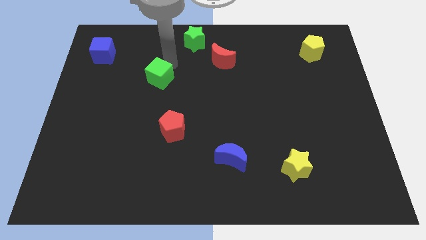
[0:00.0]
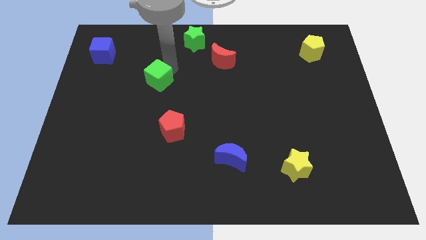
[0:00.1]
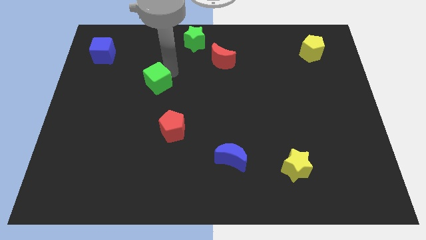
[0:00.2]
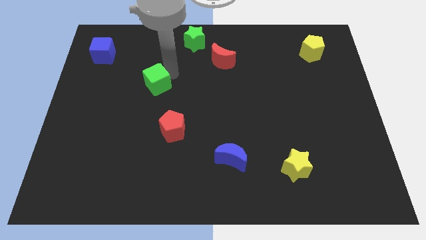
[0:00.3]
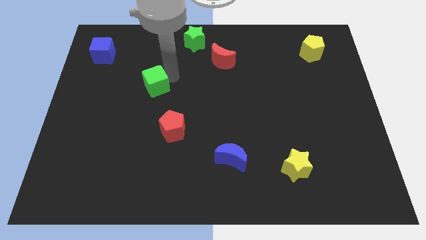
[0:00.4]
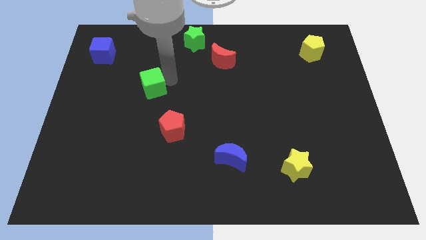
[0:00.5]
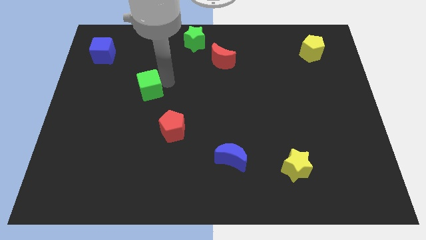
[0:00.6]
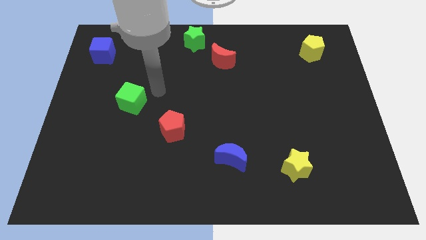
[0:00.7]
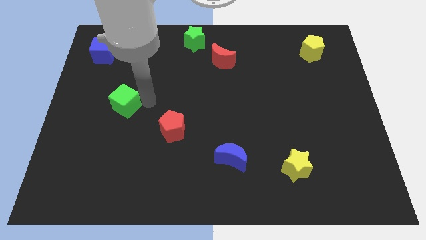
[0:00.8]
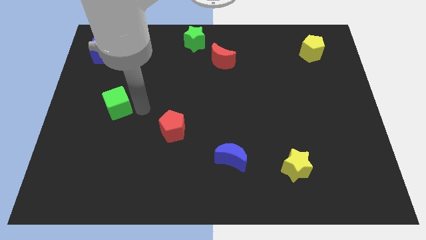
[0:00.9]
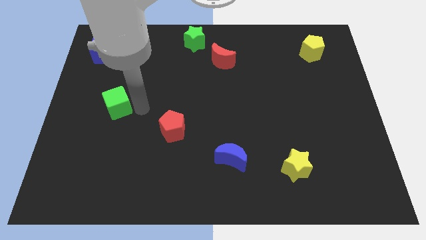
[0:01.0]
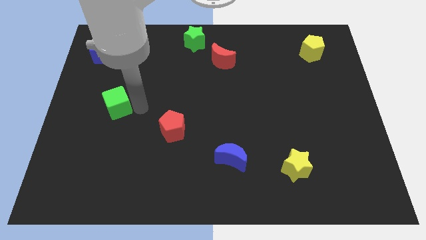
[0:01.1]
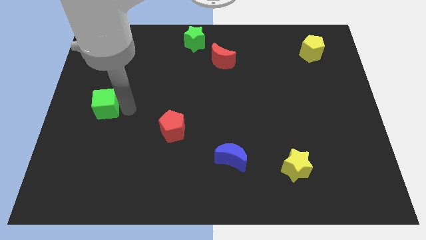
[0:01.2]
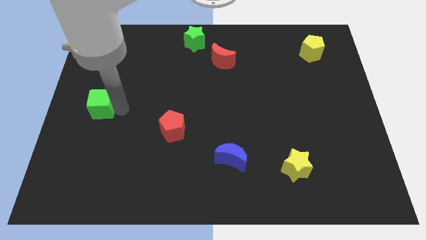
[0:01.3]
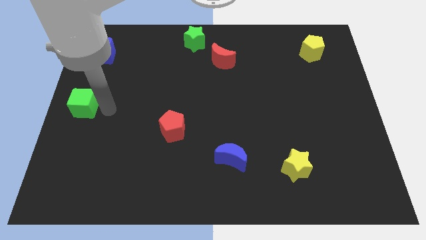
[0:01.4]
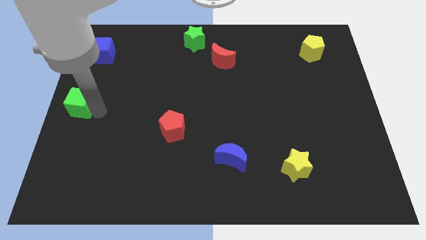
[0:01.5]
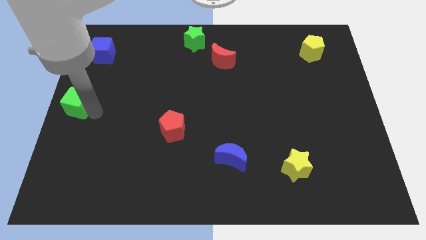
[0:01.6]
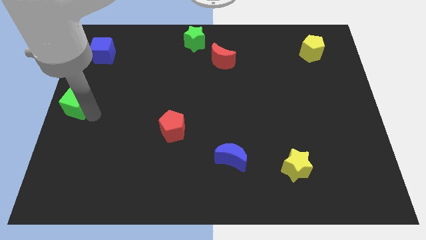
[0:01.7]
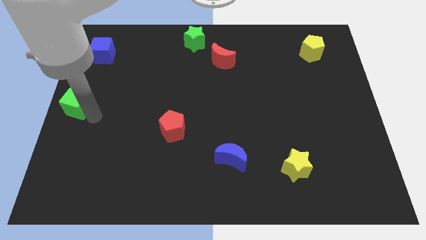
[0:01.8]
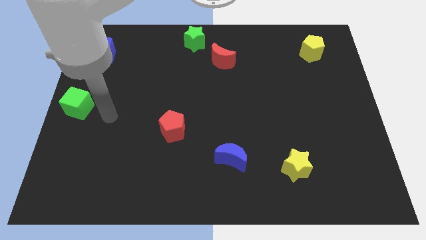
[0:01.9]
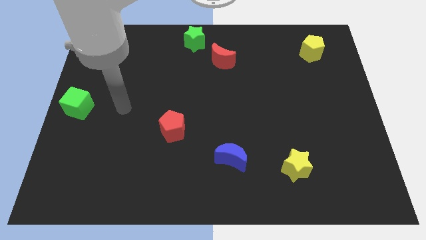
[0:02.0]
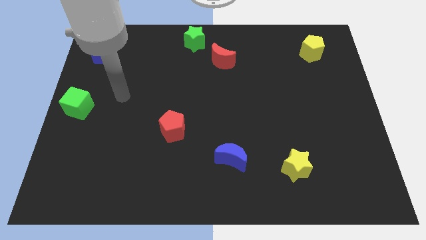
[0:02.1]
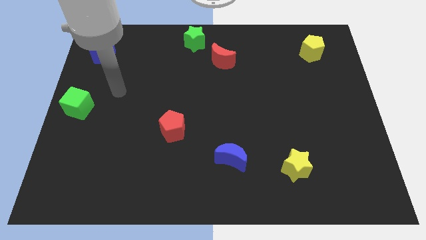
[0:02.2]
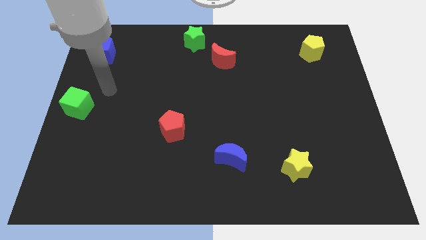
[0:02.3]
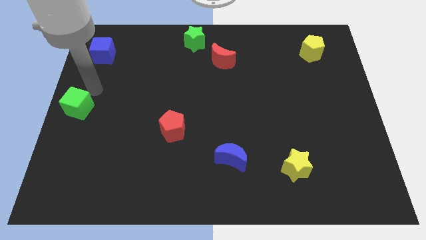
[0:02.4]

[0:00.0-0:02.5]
move the green cube to the left center of the board

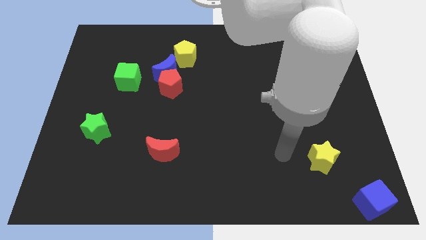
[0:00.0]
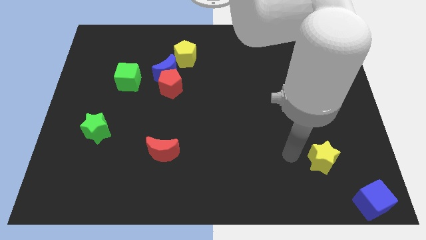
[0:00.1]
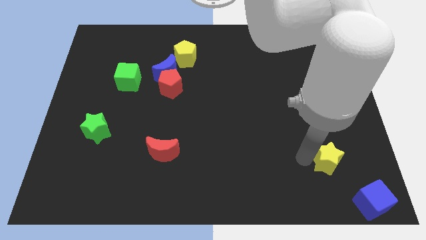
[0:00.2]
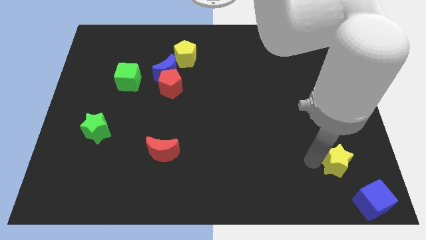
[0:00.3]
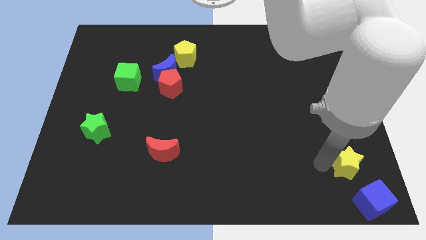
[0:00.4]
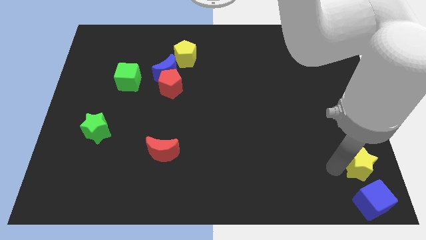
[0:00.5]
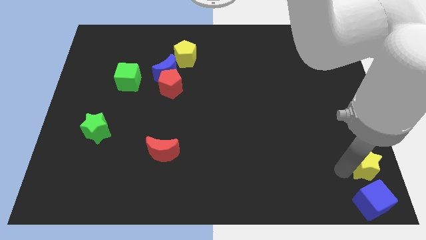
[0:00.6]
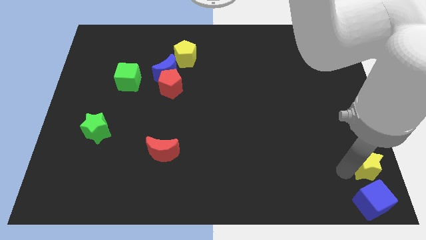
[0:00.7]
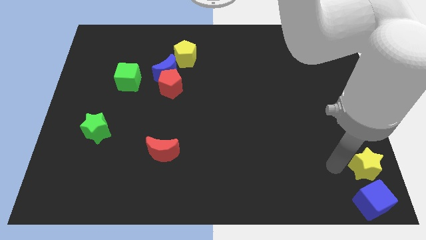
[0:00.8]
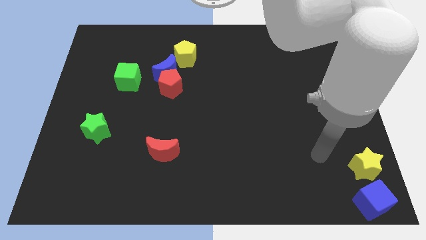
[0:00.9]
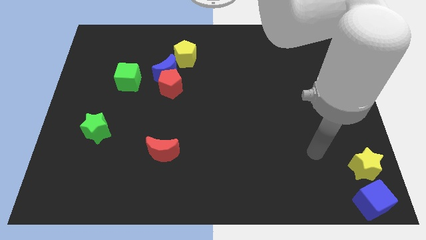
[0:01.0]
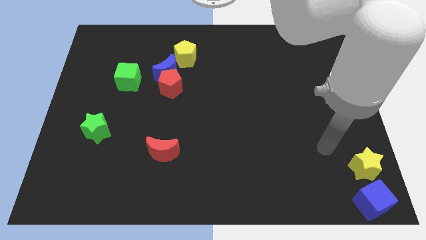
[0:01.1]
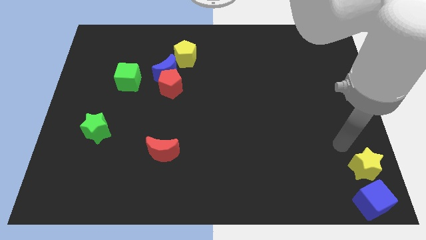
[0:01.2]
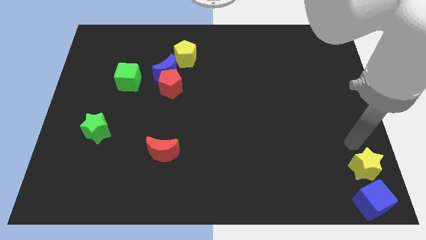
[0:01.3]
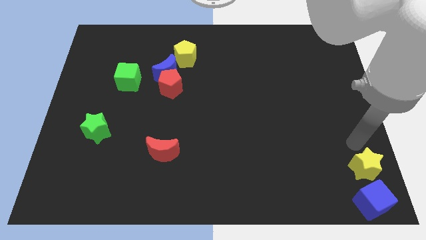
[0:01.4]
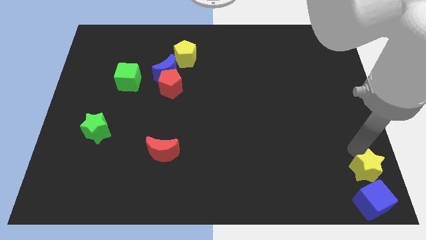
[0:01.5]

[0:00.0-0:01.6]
move the yellow star to the top of the blue cube

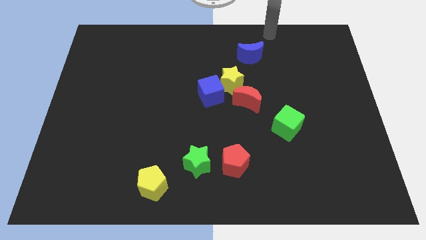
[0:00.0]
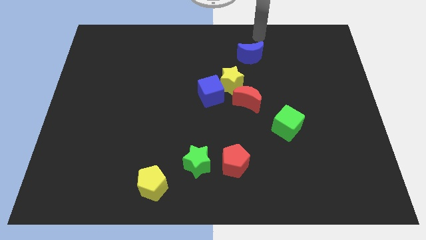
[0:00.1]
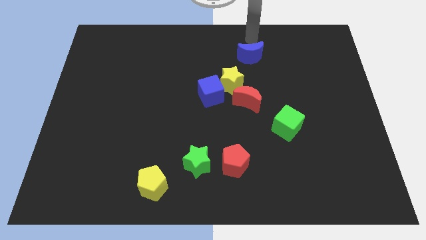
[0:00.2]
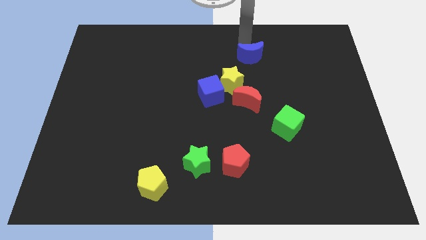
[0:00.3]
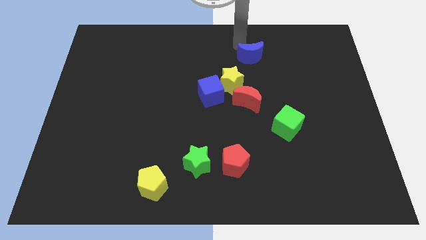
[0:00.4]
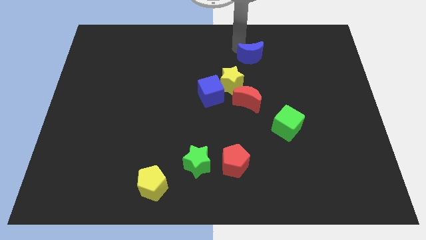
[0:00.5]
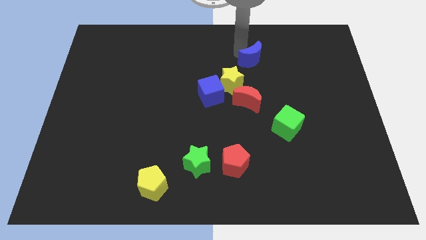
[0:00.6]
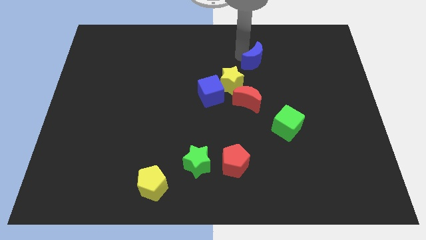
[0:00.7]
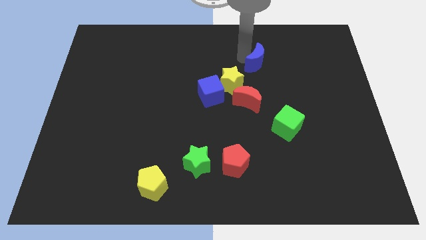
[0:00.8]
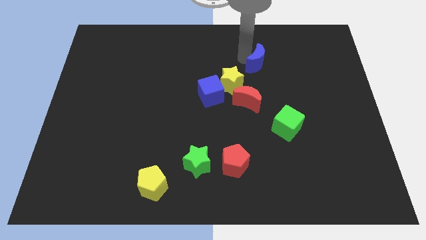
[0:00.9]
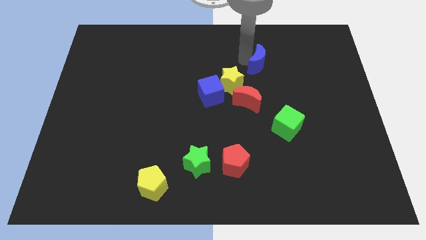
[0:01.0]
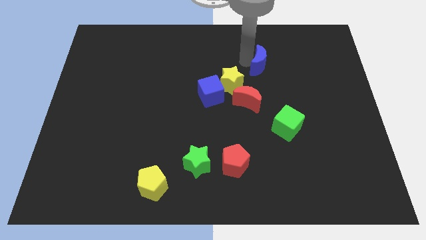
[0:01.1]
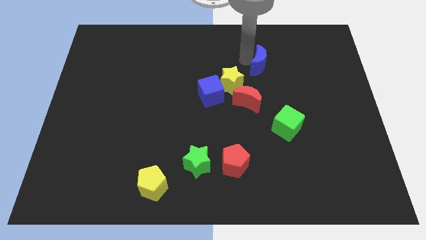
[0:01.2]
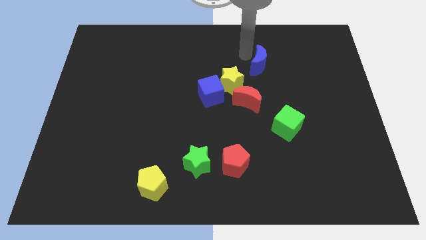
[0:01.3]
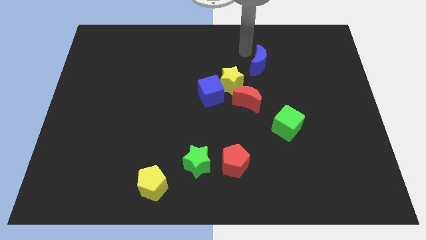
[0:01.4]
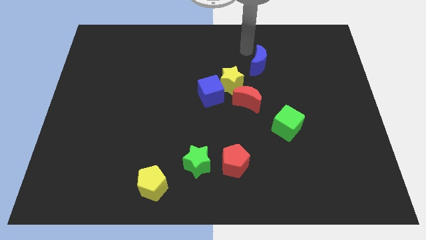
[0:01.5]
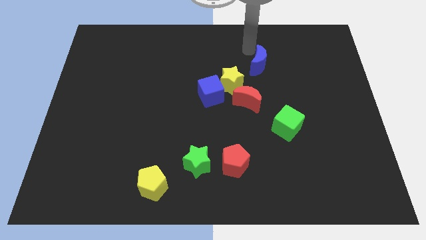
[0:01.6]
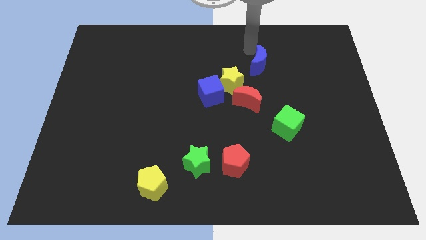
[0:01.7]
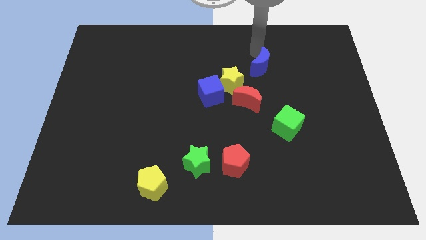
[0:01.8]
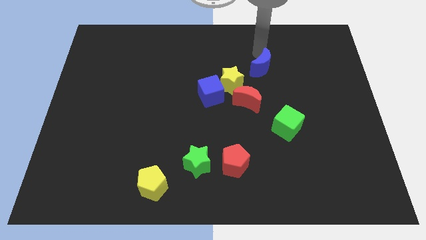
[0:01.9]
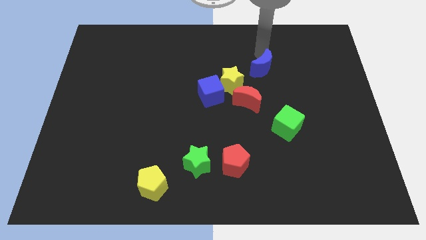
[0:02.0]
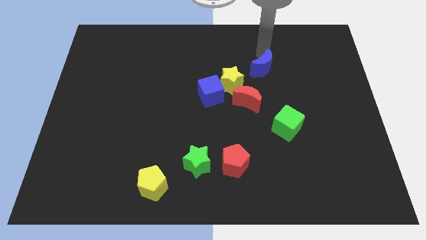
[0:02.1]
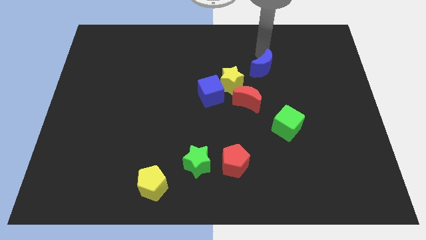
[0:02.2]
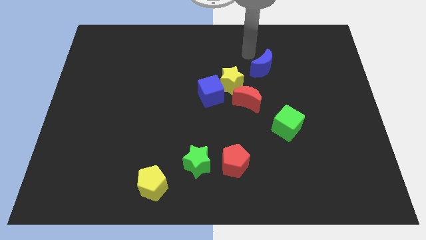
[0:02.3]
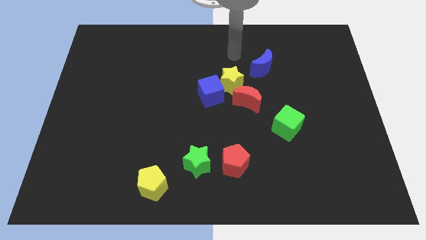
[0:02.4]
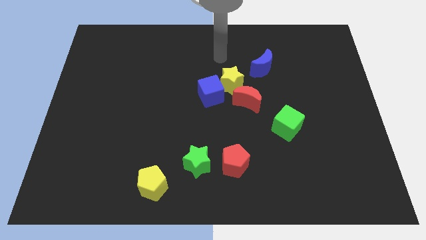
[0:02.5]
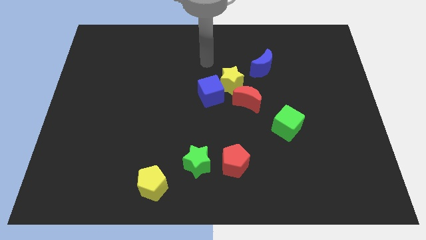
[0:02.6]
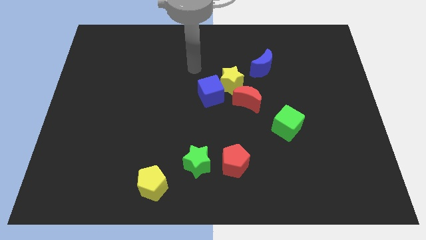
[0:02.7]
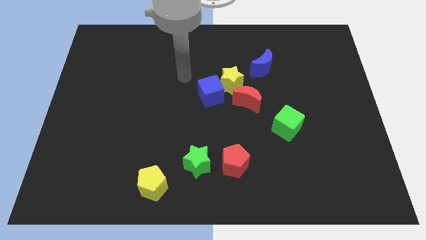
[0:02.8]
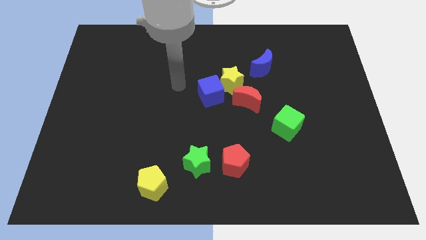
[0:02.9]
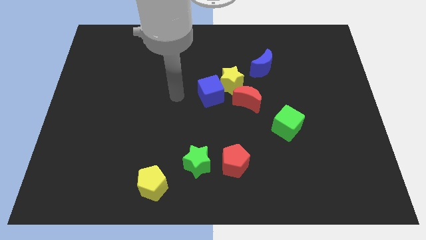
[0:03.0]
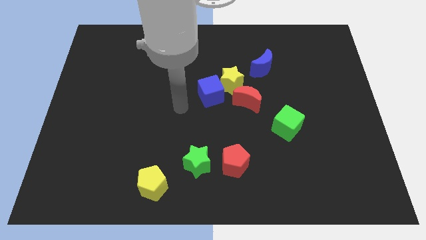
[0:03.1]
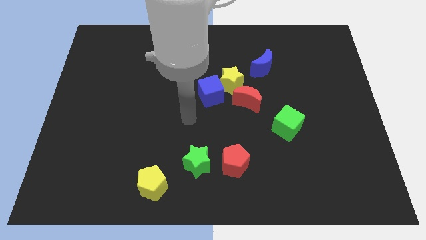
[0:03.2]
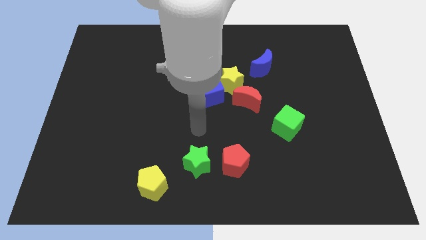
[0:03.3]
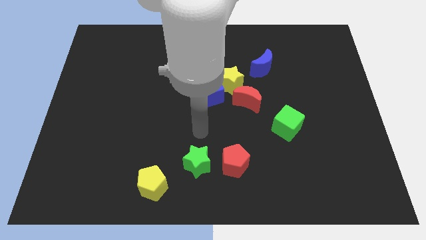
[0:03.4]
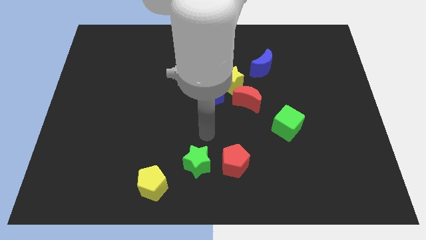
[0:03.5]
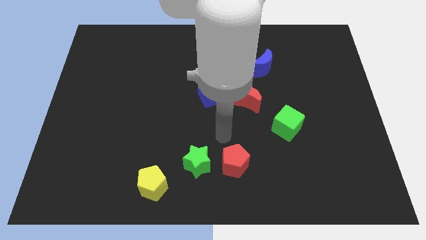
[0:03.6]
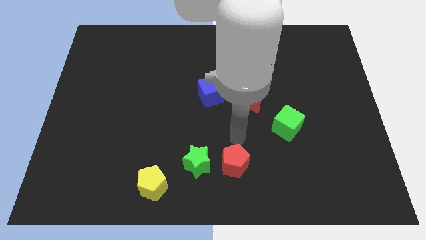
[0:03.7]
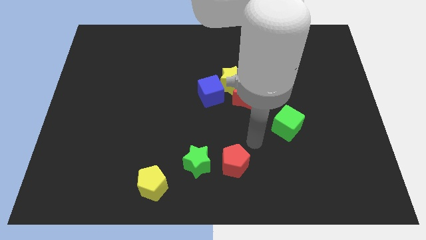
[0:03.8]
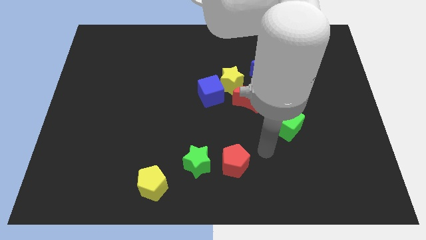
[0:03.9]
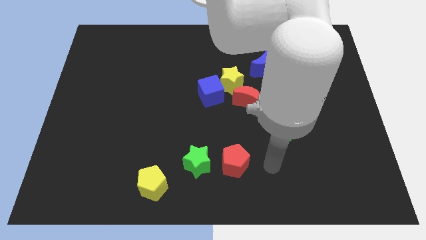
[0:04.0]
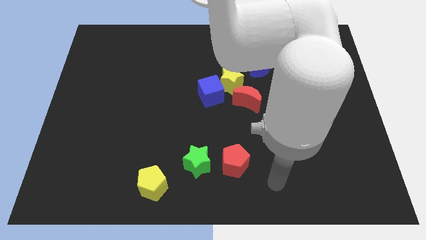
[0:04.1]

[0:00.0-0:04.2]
slightly move the blue crescent to the right of the board

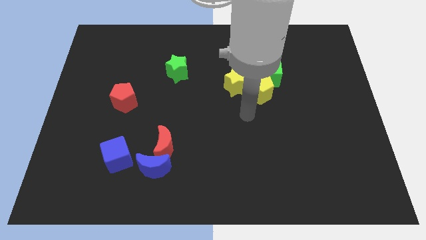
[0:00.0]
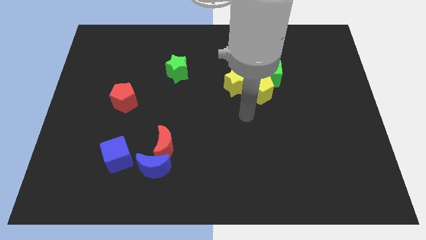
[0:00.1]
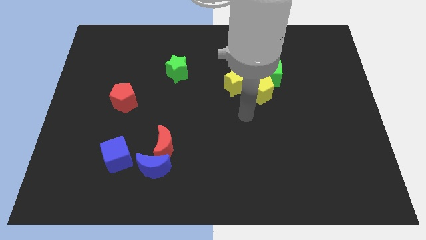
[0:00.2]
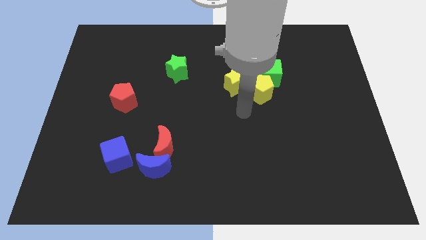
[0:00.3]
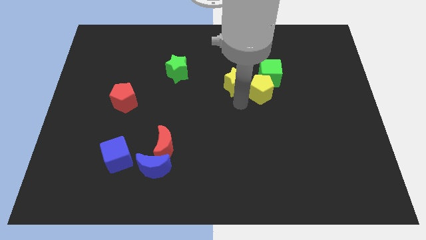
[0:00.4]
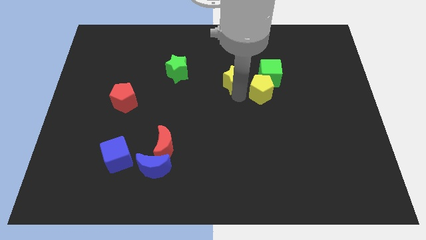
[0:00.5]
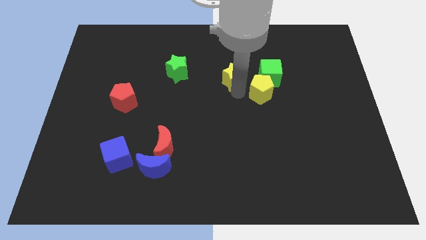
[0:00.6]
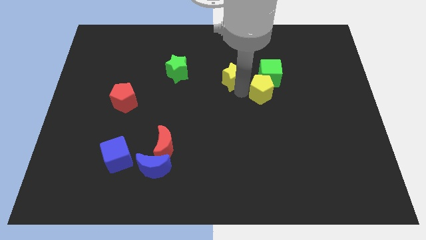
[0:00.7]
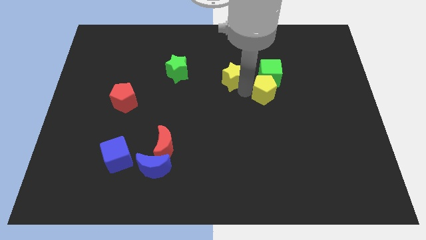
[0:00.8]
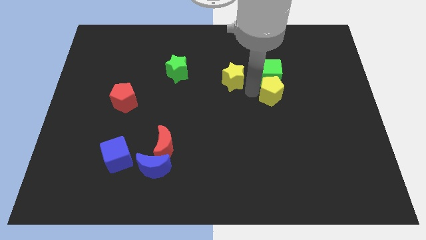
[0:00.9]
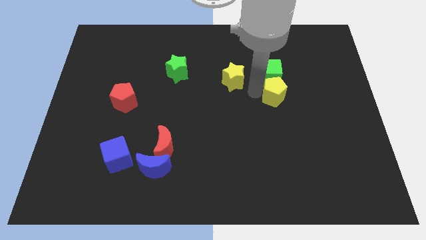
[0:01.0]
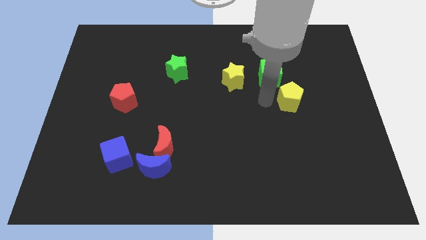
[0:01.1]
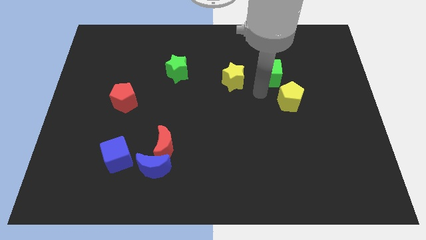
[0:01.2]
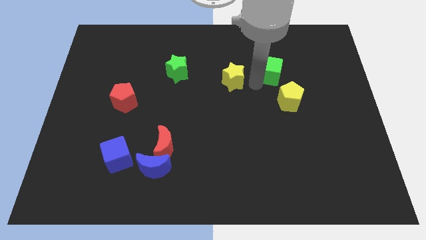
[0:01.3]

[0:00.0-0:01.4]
separate the yellow star and the yellow pentagon
